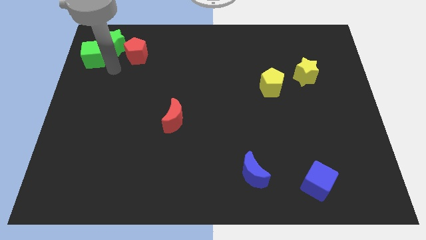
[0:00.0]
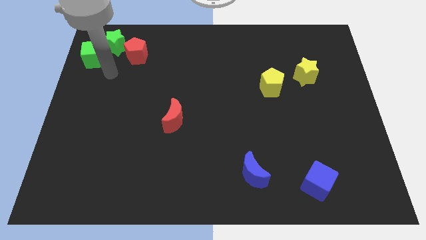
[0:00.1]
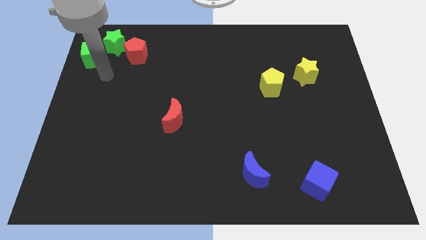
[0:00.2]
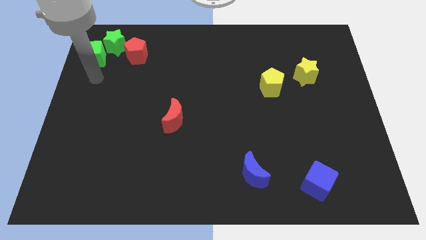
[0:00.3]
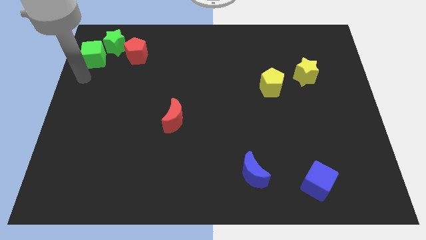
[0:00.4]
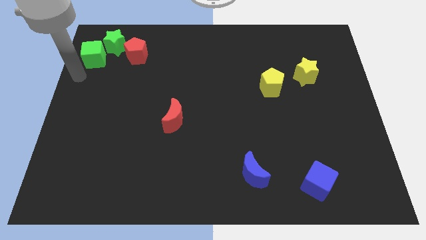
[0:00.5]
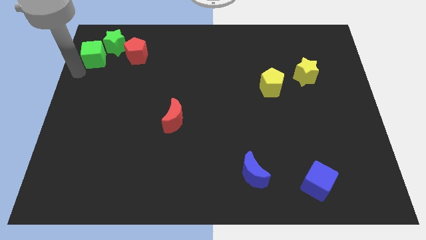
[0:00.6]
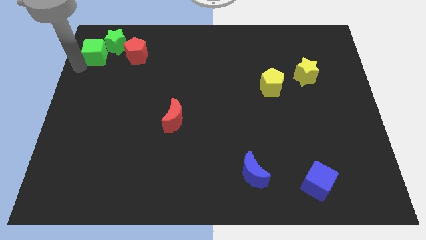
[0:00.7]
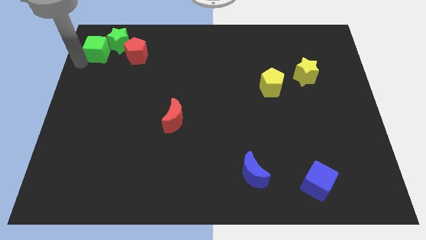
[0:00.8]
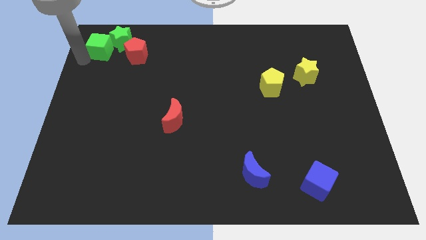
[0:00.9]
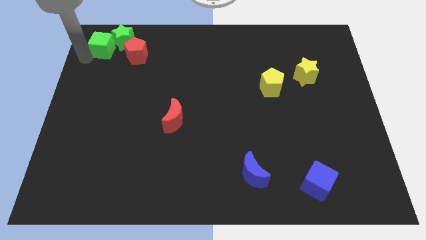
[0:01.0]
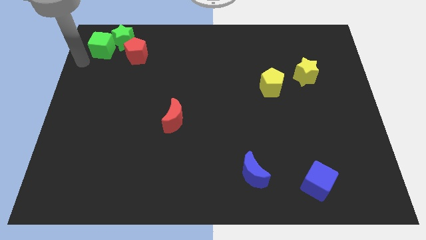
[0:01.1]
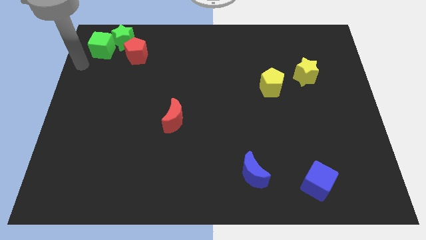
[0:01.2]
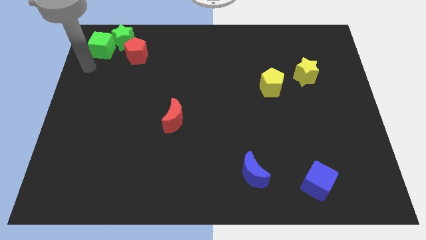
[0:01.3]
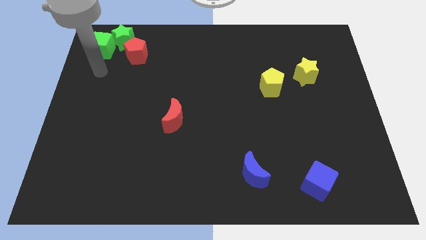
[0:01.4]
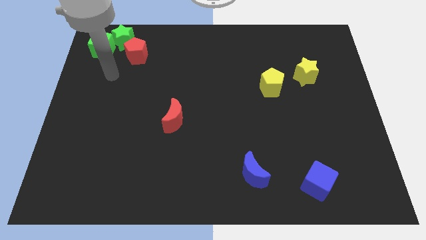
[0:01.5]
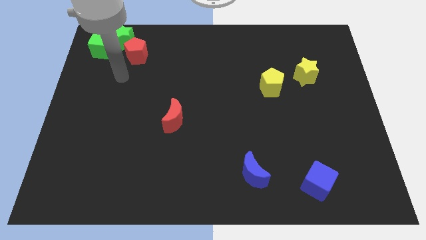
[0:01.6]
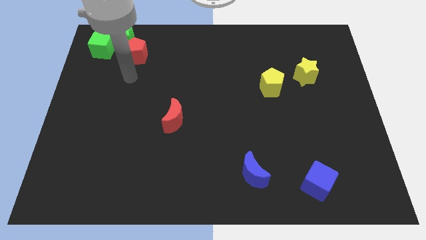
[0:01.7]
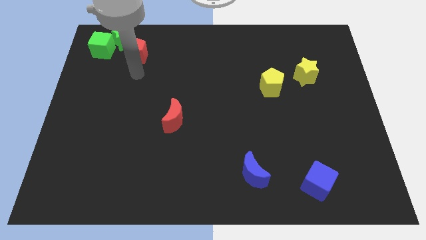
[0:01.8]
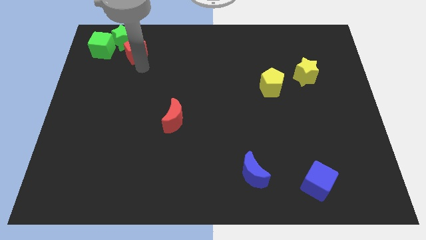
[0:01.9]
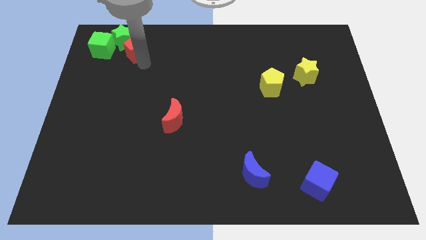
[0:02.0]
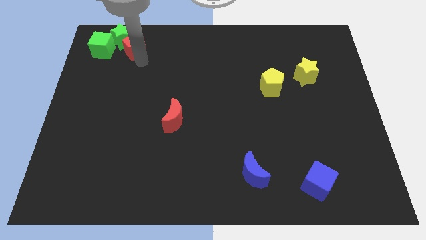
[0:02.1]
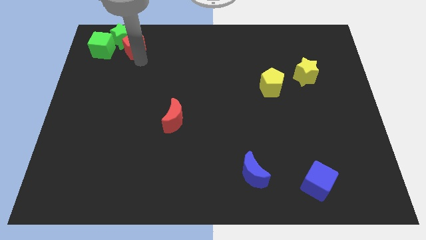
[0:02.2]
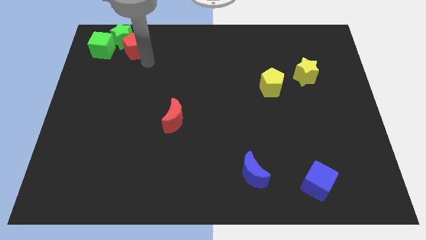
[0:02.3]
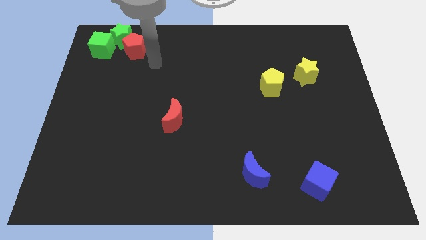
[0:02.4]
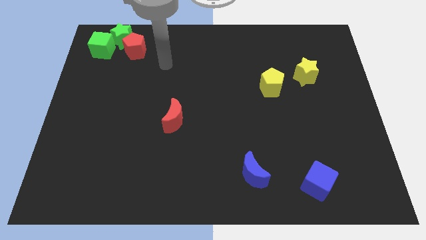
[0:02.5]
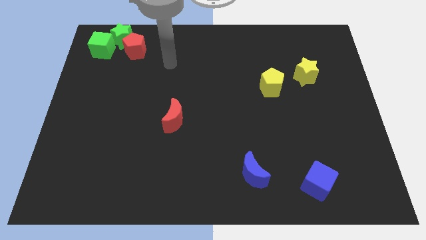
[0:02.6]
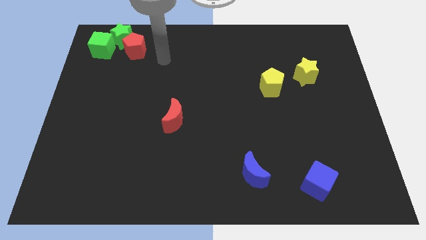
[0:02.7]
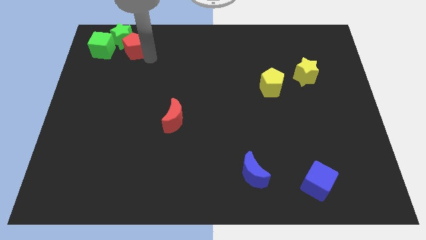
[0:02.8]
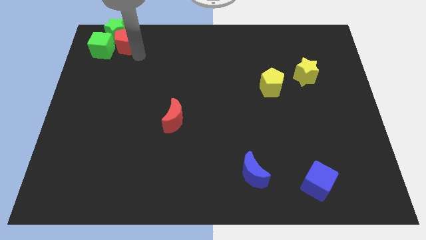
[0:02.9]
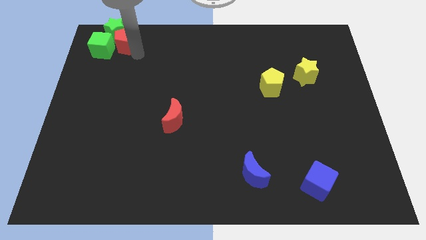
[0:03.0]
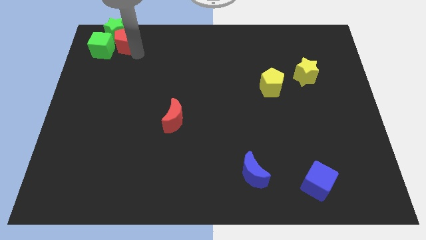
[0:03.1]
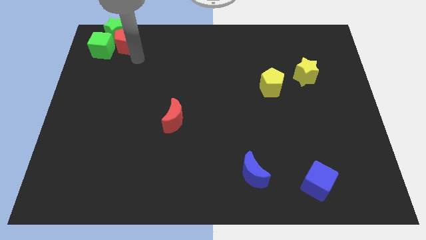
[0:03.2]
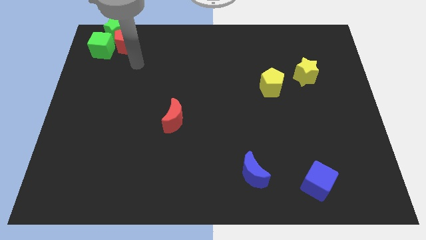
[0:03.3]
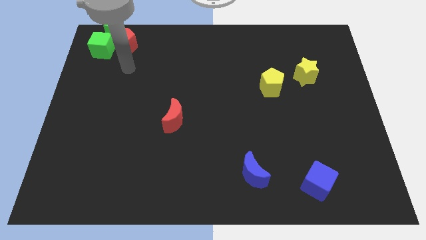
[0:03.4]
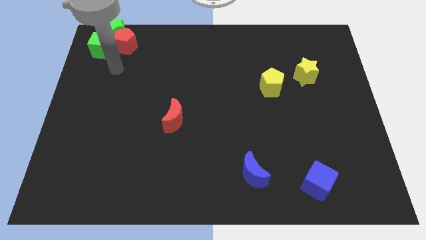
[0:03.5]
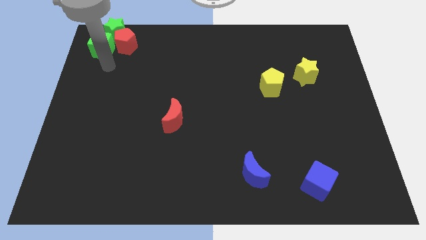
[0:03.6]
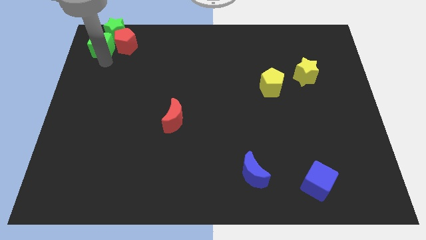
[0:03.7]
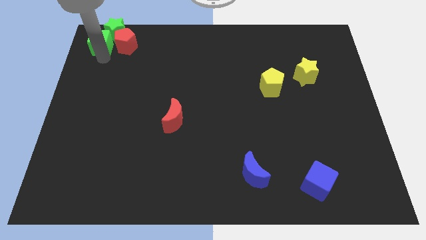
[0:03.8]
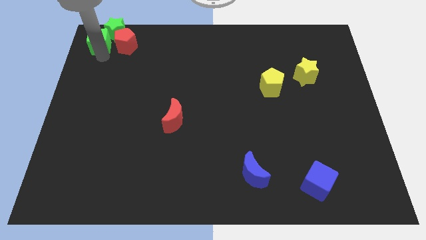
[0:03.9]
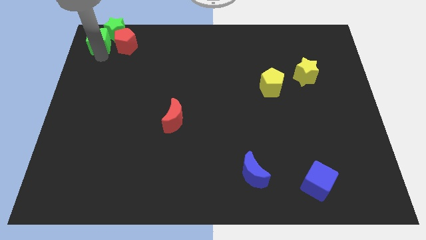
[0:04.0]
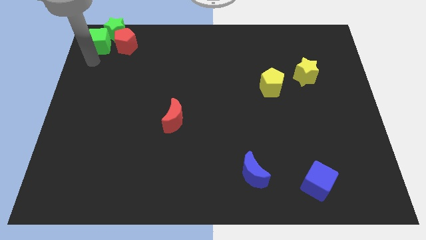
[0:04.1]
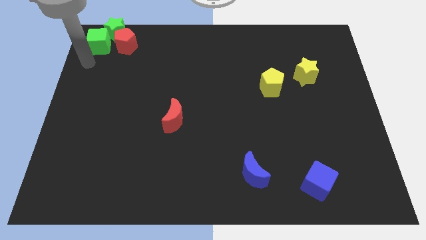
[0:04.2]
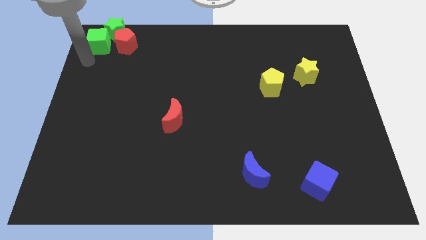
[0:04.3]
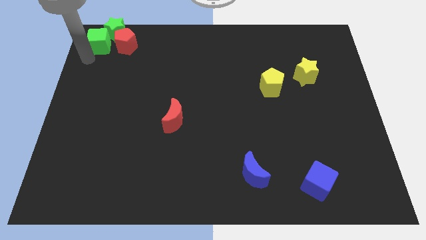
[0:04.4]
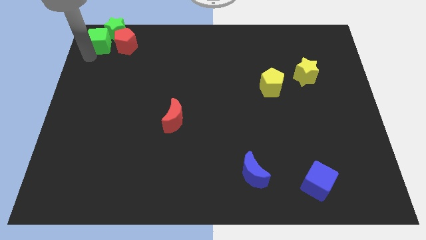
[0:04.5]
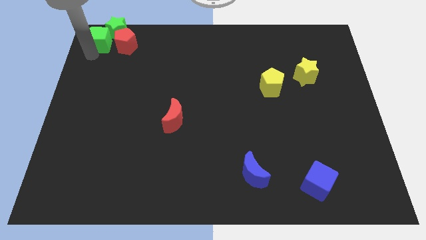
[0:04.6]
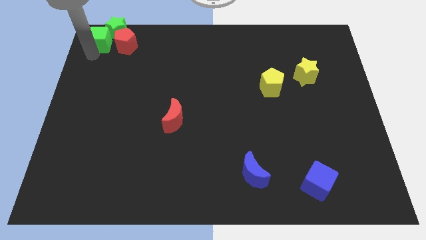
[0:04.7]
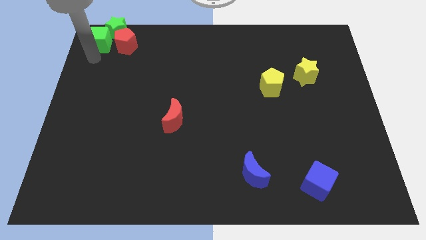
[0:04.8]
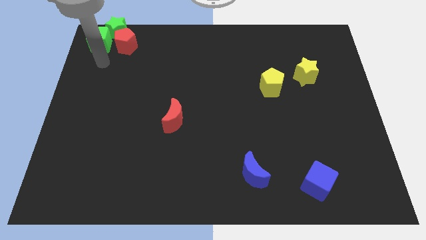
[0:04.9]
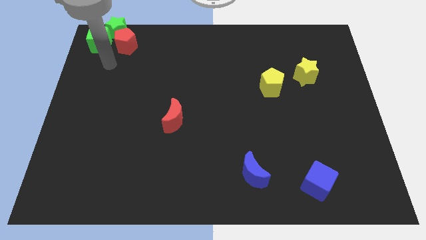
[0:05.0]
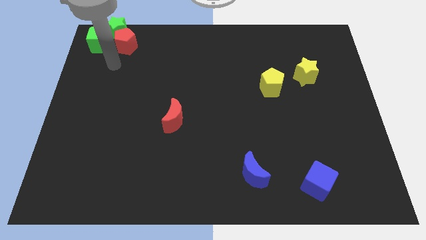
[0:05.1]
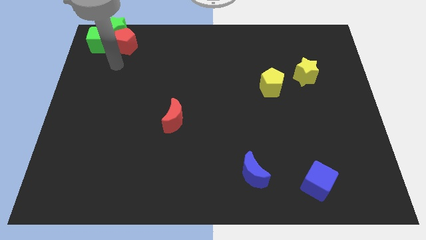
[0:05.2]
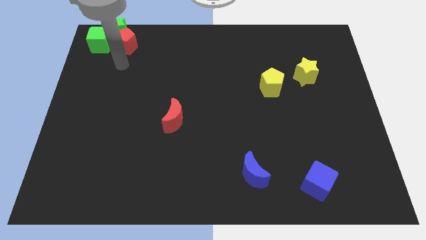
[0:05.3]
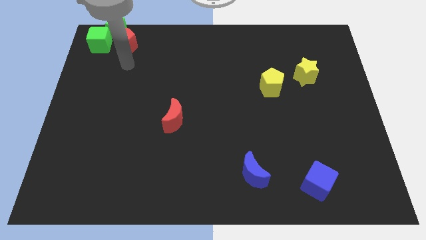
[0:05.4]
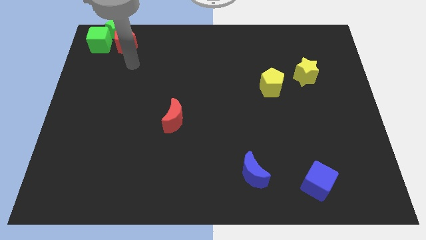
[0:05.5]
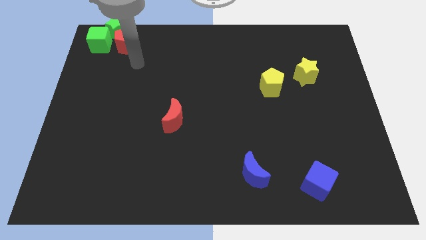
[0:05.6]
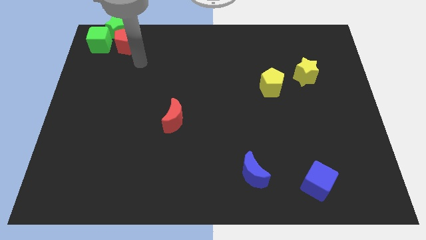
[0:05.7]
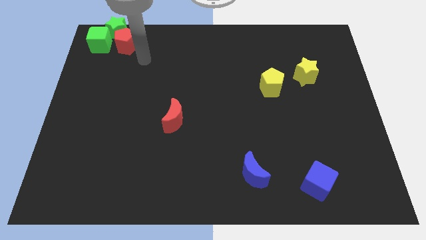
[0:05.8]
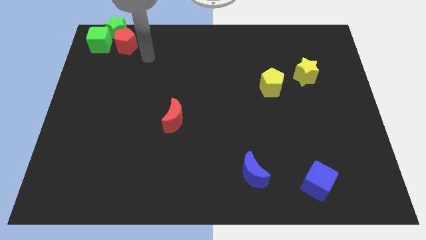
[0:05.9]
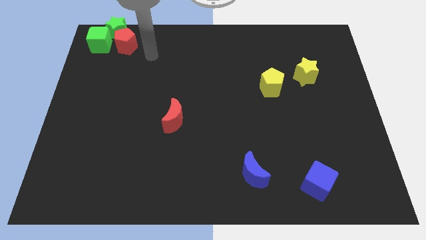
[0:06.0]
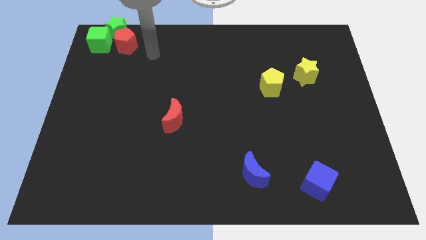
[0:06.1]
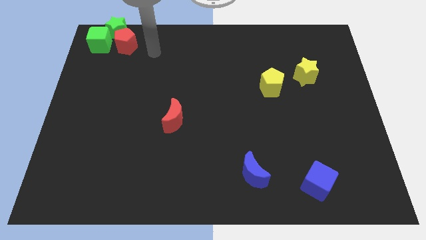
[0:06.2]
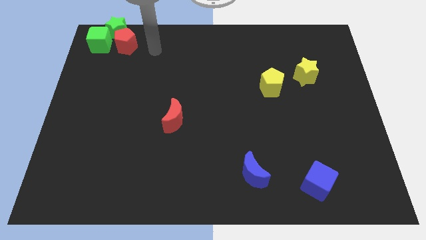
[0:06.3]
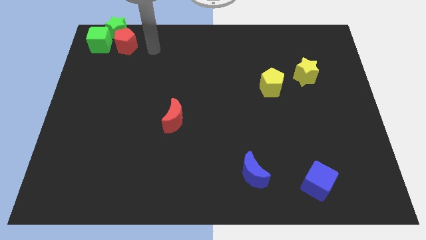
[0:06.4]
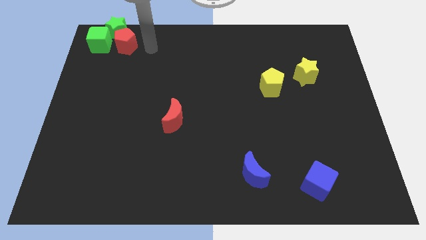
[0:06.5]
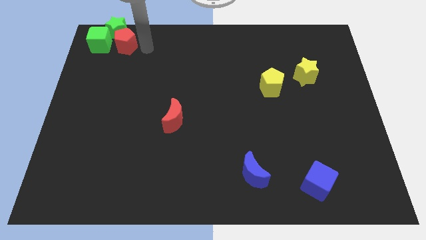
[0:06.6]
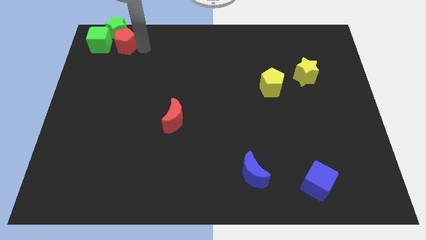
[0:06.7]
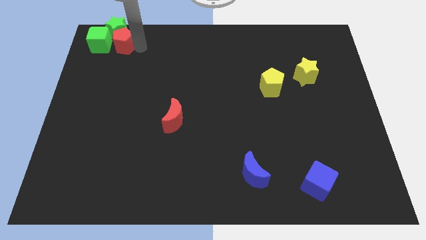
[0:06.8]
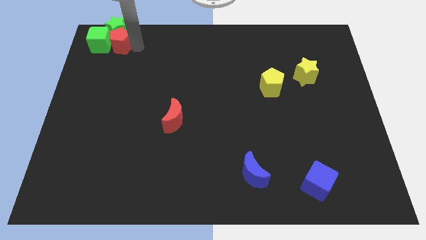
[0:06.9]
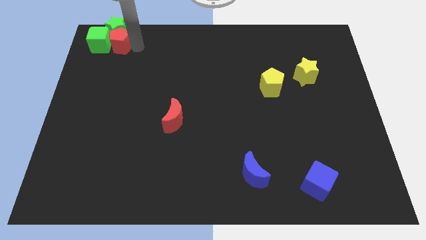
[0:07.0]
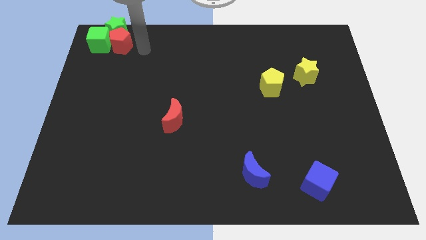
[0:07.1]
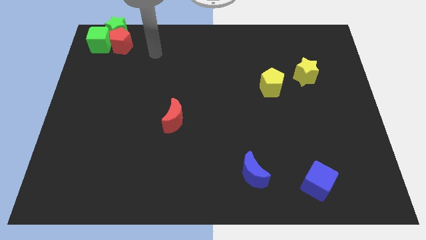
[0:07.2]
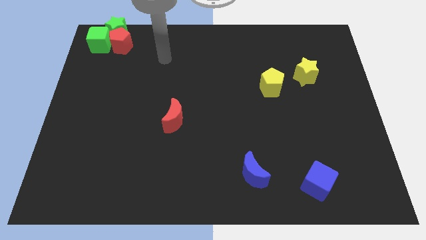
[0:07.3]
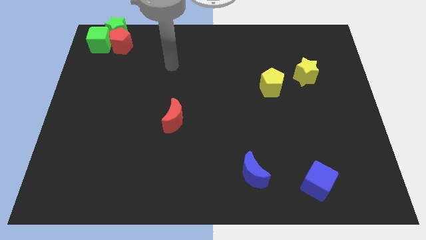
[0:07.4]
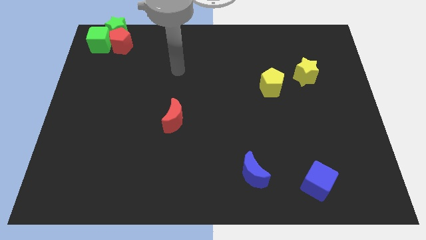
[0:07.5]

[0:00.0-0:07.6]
place the green cube green star and red pentagon at the top left corner of the board

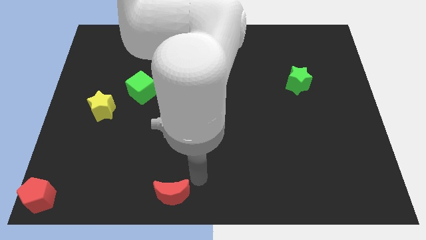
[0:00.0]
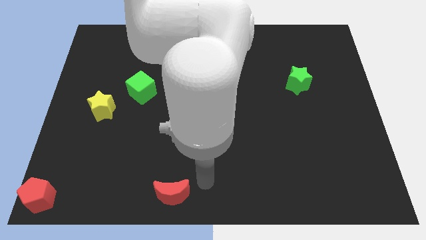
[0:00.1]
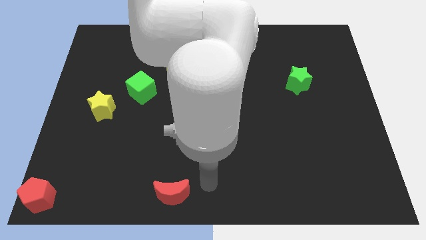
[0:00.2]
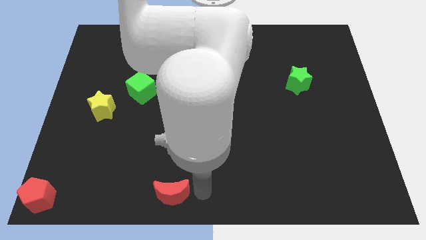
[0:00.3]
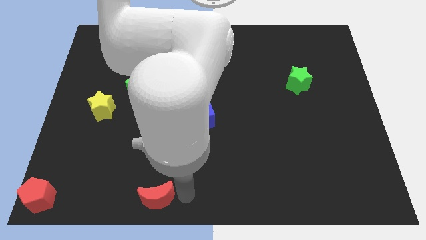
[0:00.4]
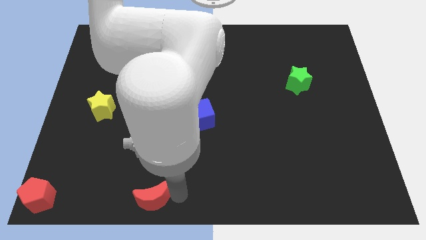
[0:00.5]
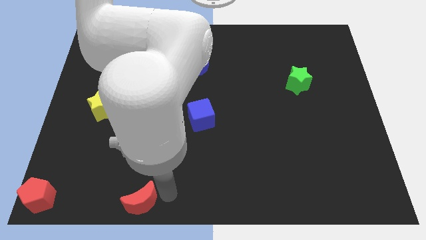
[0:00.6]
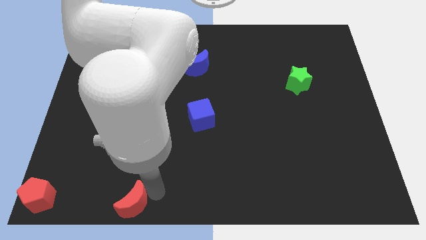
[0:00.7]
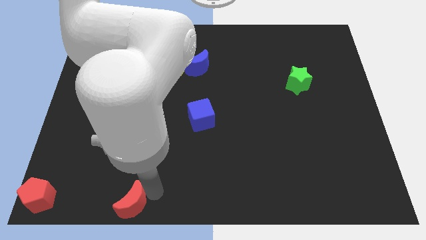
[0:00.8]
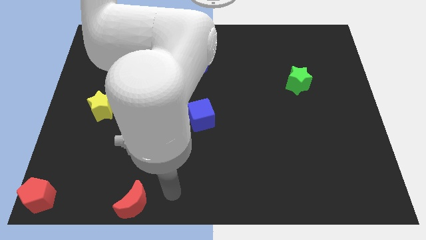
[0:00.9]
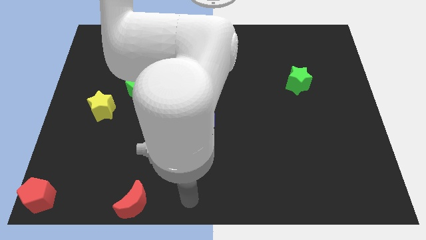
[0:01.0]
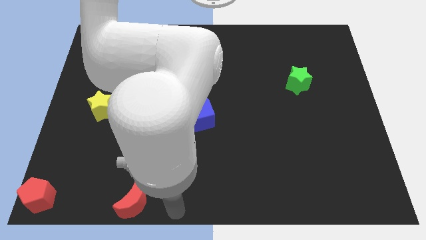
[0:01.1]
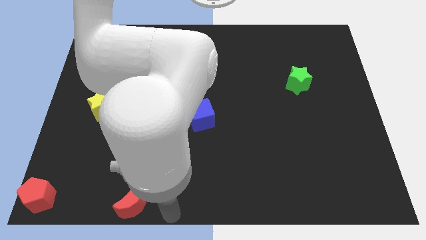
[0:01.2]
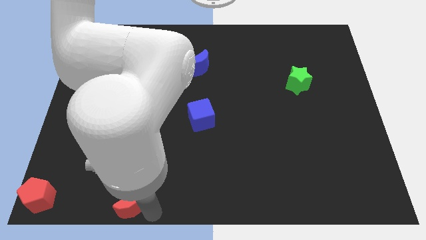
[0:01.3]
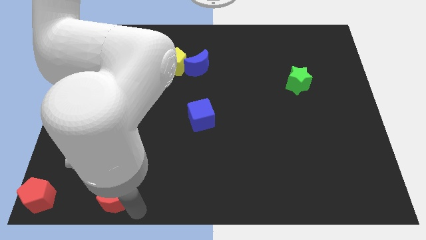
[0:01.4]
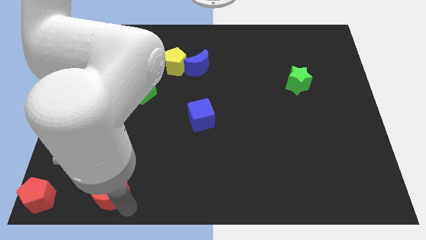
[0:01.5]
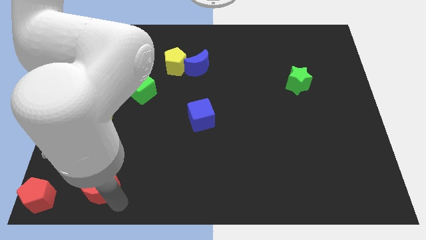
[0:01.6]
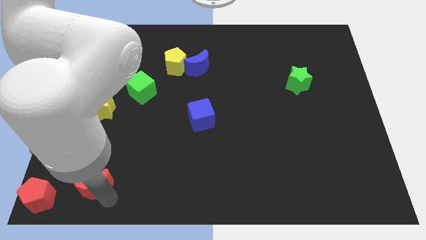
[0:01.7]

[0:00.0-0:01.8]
slide the red moon towards the bottom left corner of the board
